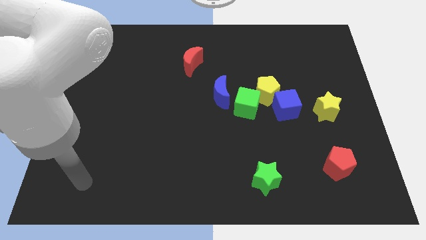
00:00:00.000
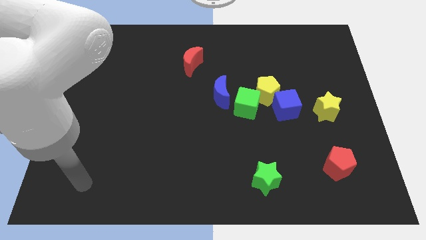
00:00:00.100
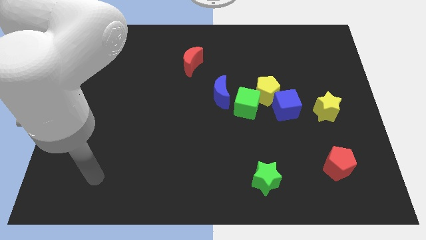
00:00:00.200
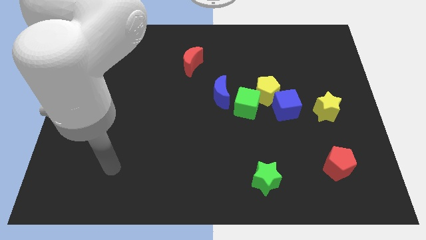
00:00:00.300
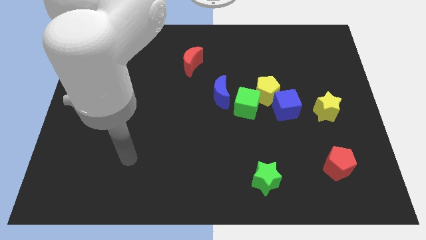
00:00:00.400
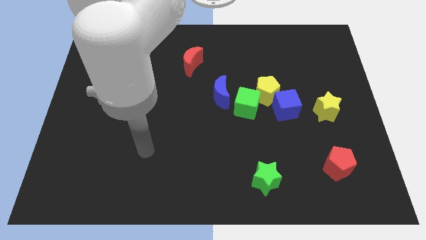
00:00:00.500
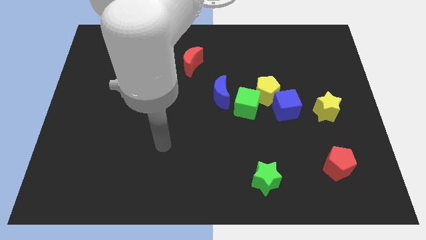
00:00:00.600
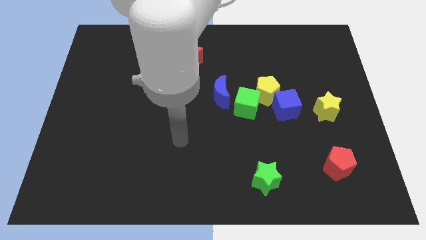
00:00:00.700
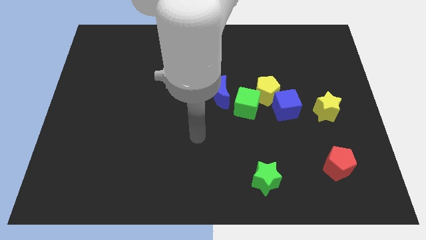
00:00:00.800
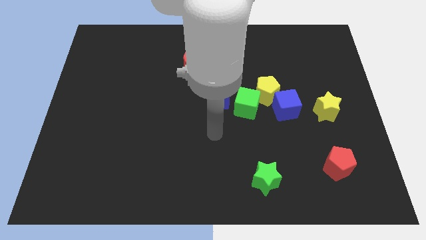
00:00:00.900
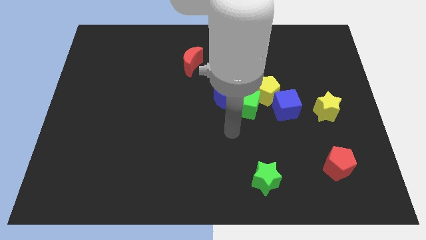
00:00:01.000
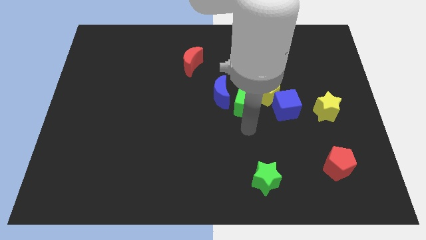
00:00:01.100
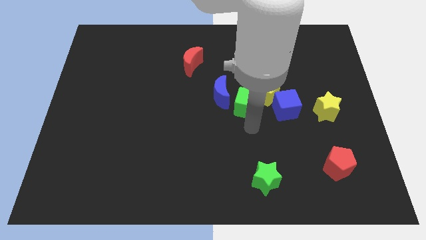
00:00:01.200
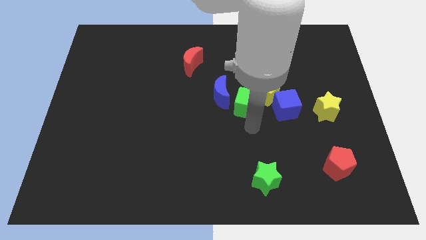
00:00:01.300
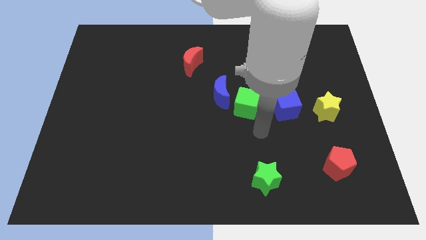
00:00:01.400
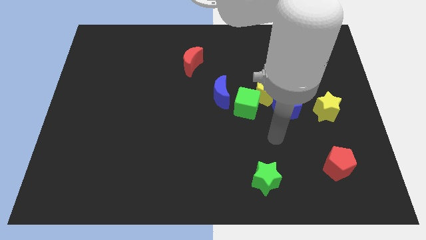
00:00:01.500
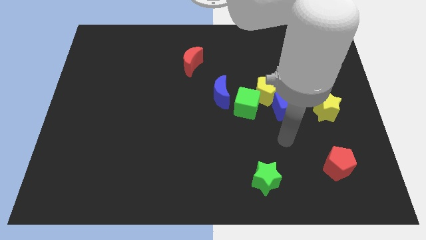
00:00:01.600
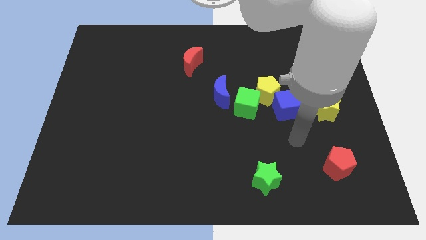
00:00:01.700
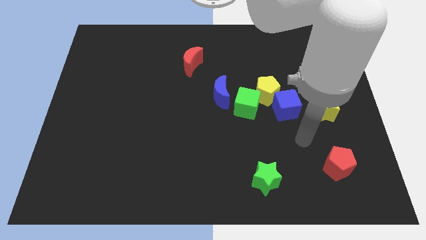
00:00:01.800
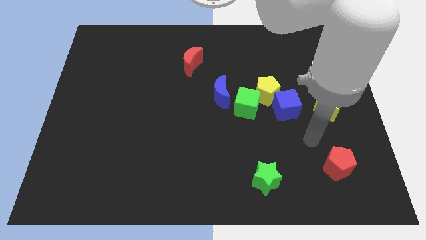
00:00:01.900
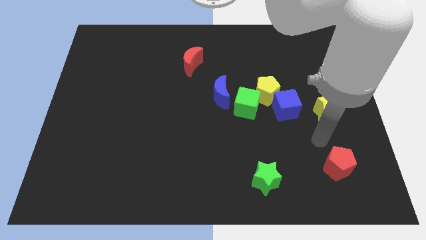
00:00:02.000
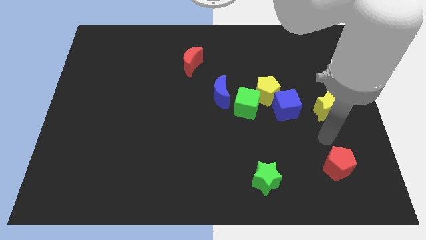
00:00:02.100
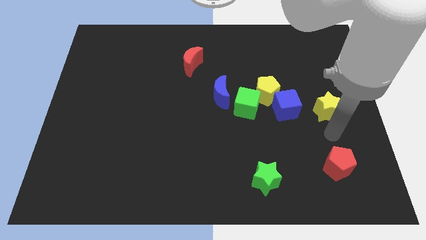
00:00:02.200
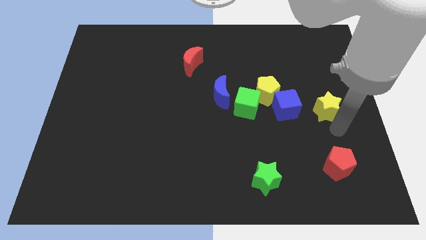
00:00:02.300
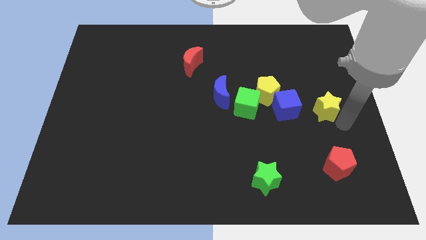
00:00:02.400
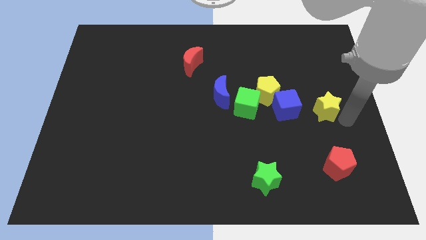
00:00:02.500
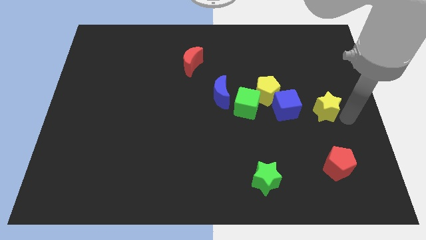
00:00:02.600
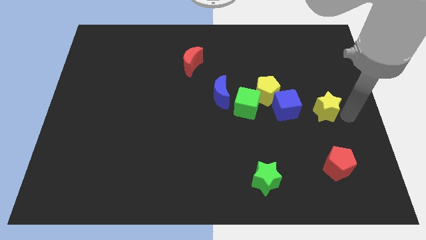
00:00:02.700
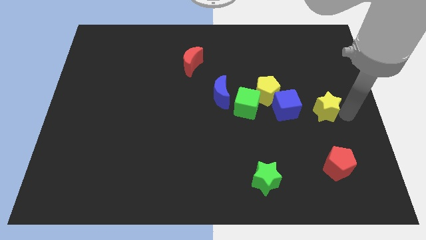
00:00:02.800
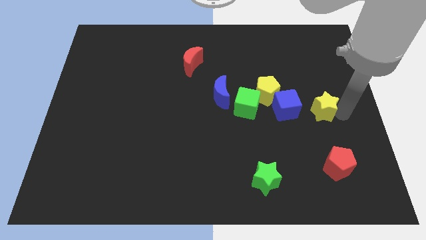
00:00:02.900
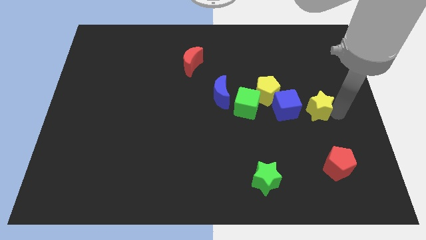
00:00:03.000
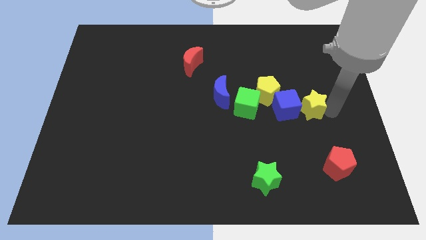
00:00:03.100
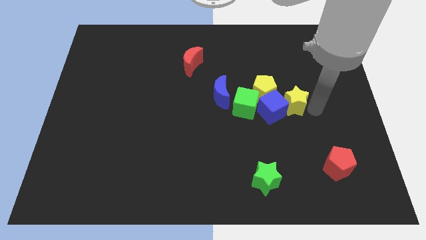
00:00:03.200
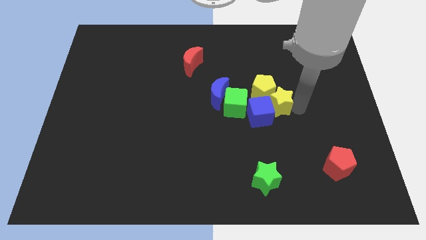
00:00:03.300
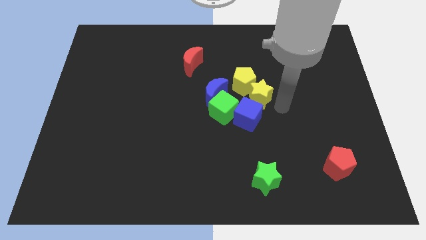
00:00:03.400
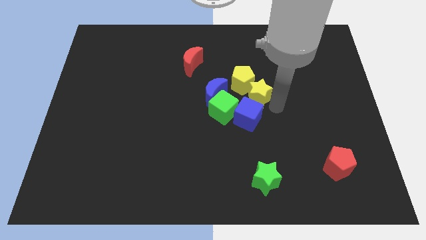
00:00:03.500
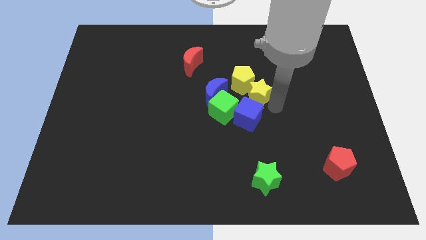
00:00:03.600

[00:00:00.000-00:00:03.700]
push the yellow star into the group of blocks

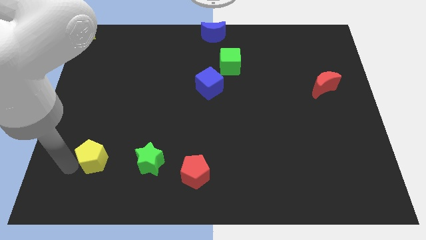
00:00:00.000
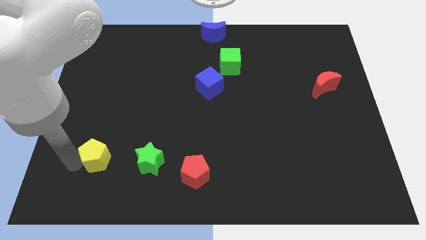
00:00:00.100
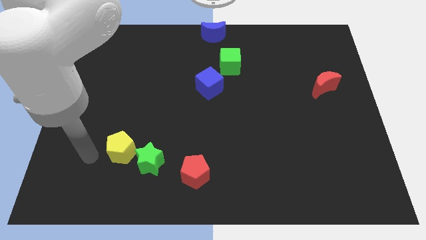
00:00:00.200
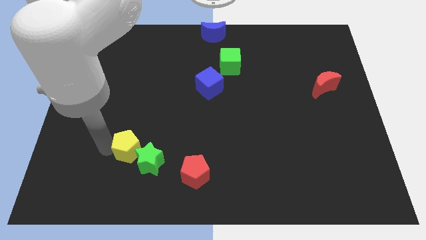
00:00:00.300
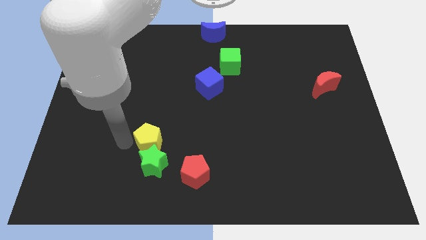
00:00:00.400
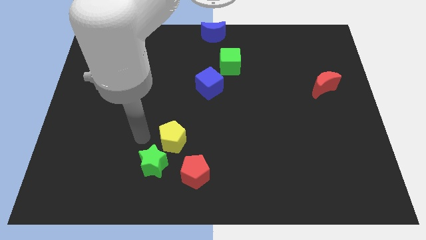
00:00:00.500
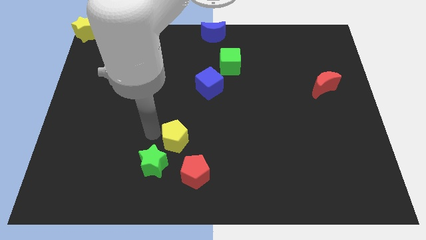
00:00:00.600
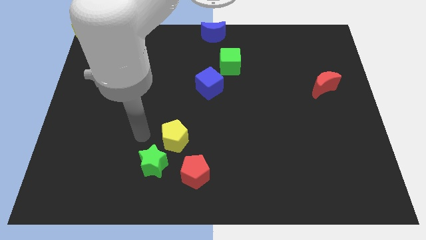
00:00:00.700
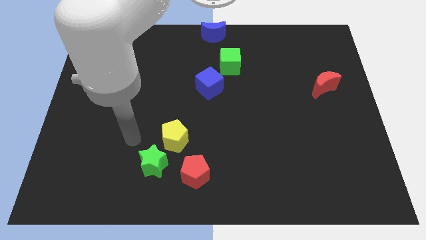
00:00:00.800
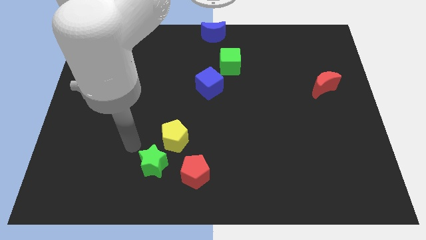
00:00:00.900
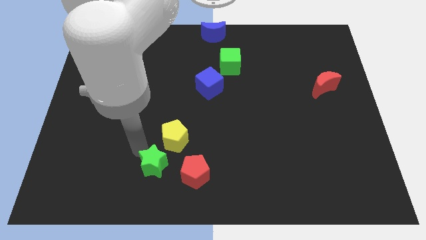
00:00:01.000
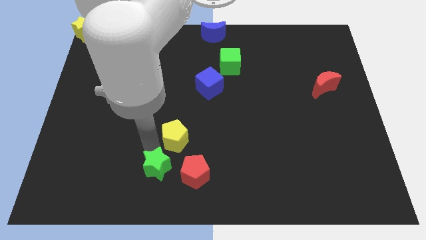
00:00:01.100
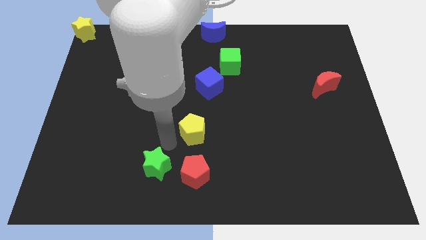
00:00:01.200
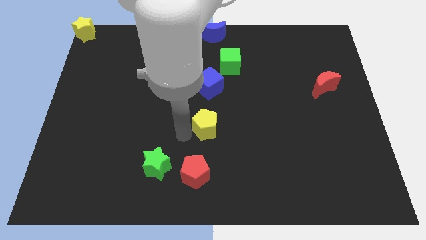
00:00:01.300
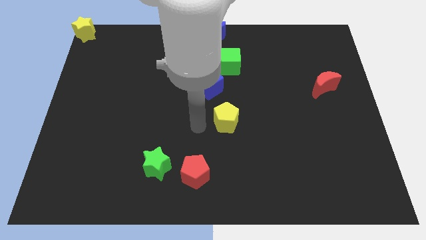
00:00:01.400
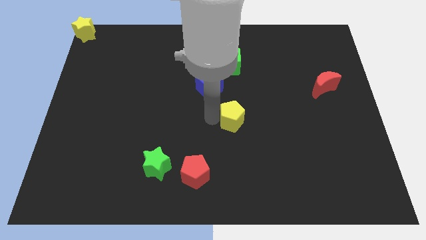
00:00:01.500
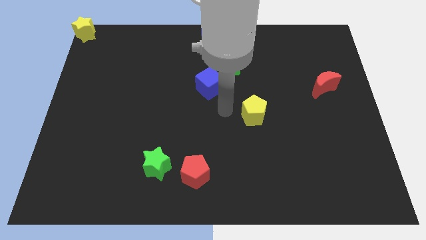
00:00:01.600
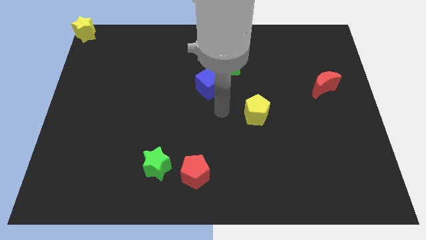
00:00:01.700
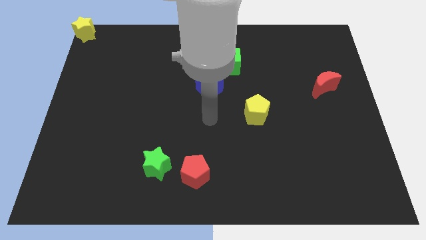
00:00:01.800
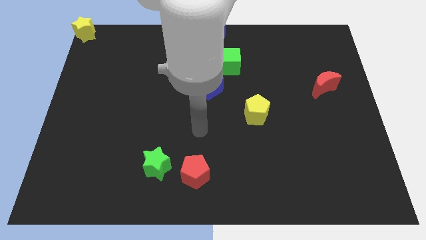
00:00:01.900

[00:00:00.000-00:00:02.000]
place the yellow pentagon in between the red moon and green star

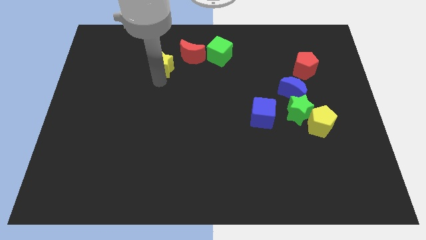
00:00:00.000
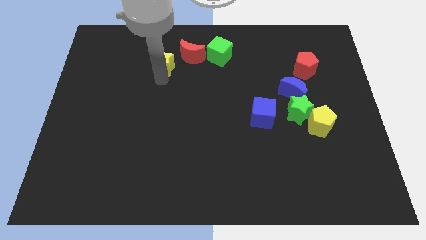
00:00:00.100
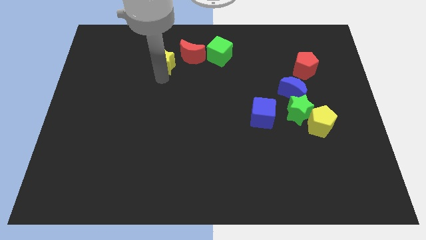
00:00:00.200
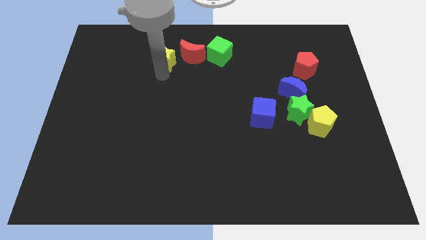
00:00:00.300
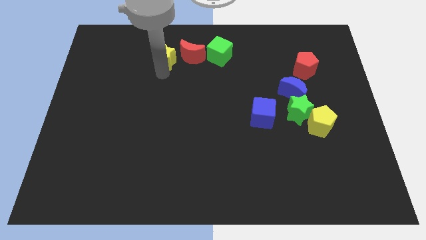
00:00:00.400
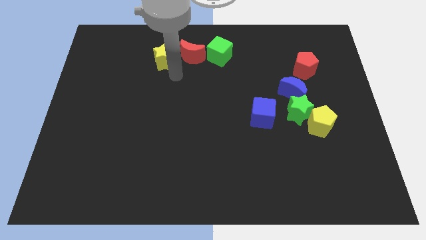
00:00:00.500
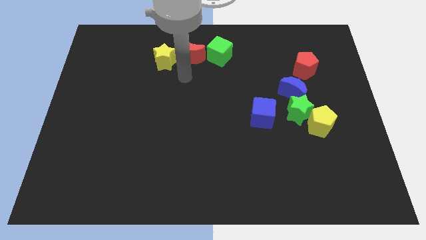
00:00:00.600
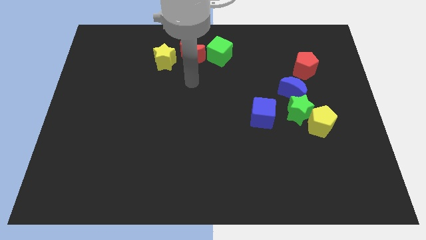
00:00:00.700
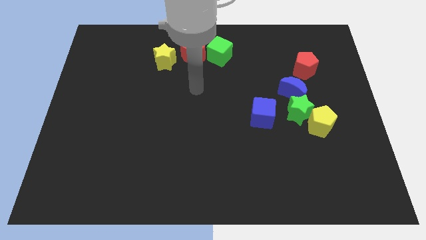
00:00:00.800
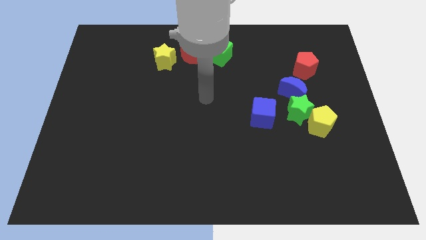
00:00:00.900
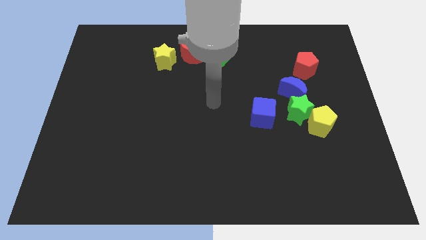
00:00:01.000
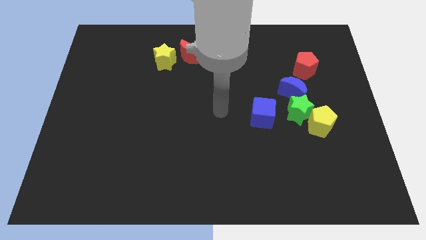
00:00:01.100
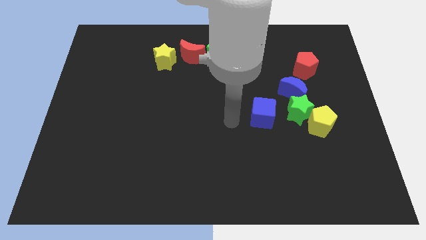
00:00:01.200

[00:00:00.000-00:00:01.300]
move the yellow star parallel to red crescent

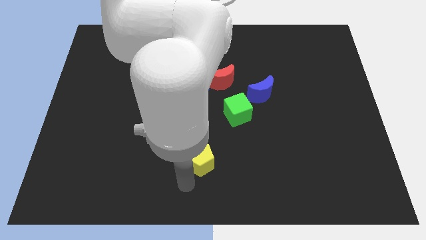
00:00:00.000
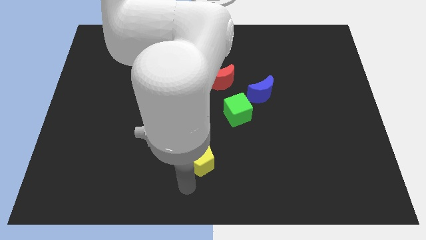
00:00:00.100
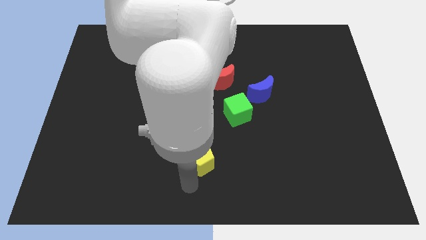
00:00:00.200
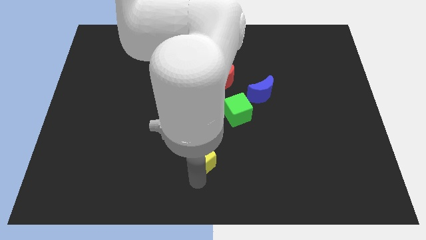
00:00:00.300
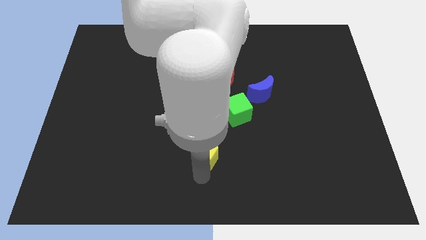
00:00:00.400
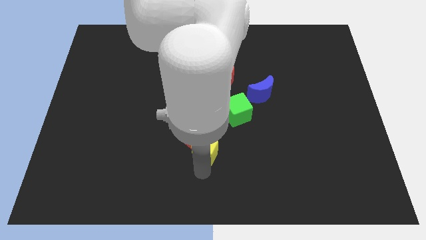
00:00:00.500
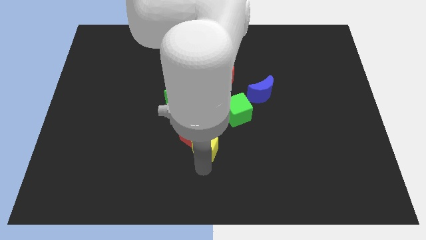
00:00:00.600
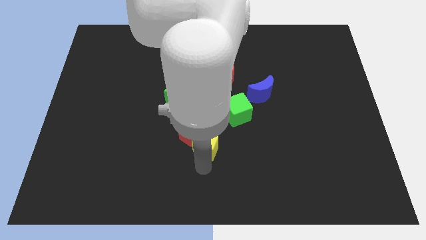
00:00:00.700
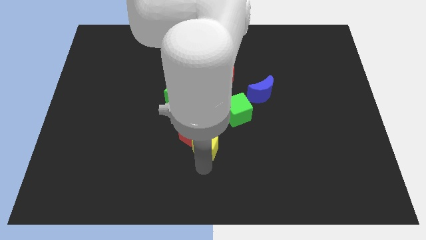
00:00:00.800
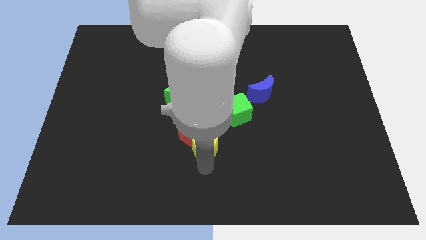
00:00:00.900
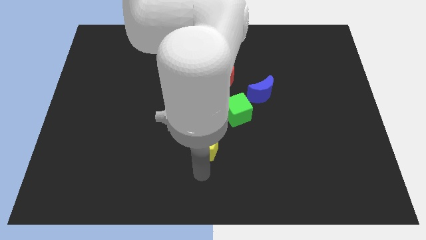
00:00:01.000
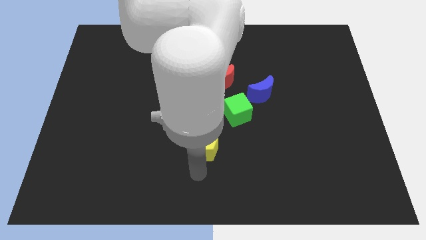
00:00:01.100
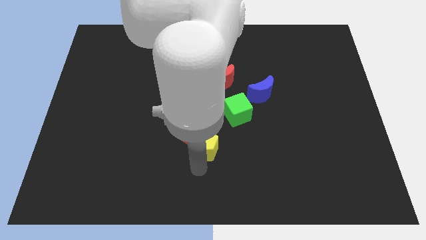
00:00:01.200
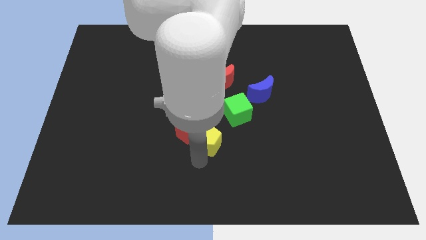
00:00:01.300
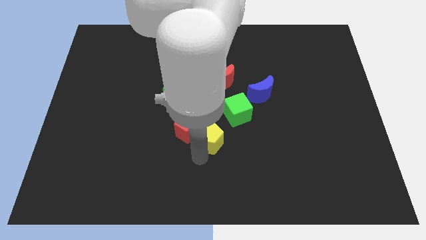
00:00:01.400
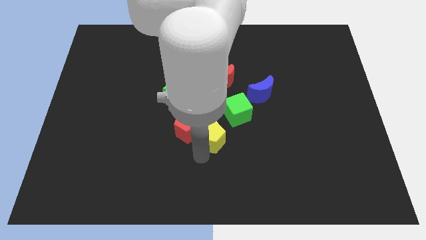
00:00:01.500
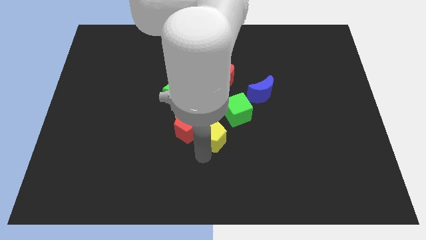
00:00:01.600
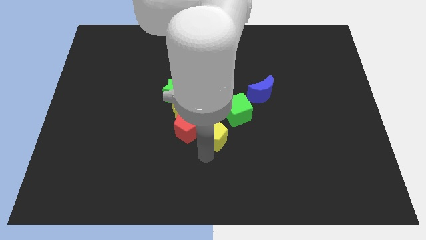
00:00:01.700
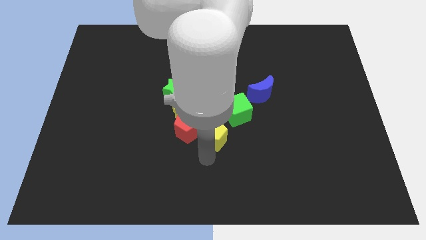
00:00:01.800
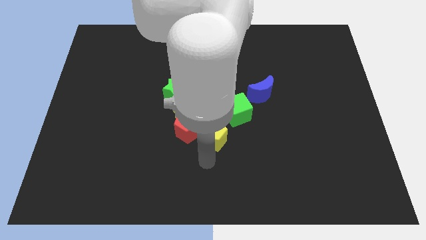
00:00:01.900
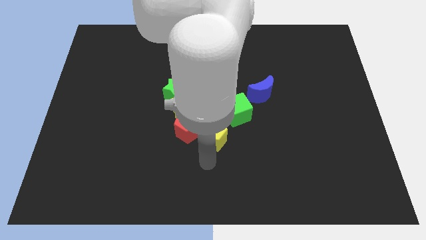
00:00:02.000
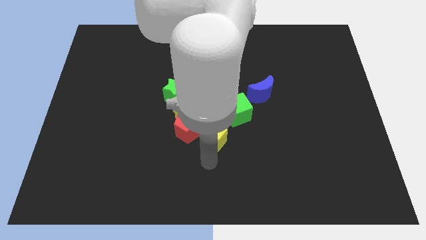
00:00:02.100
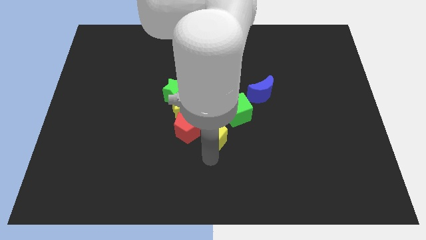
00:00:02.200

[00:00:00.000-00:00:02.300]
place yellow pentagon right to the red pentagon
